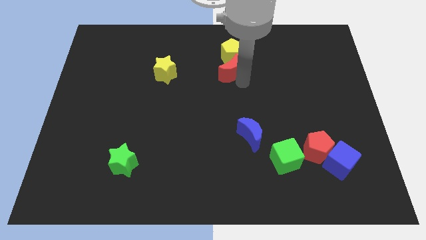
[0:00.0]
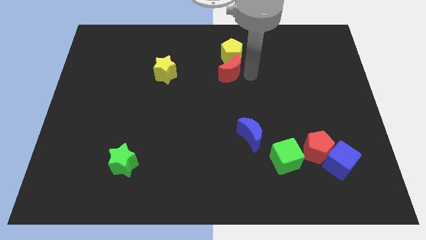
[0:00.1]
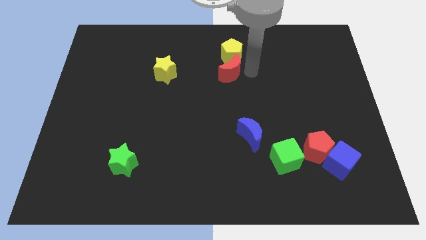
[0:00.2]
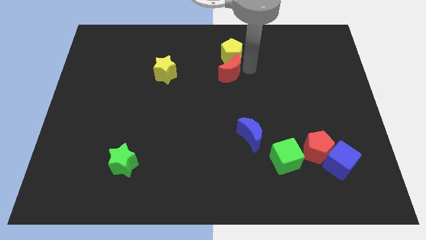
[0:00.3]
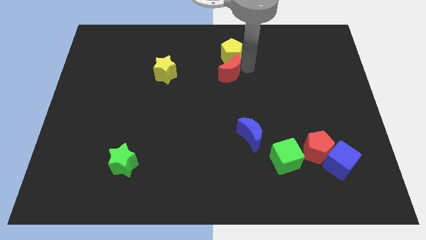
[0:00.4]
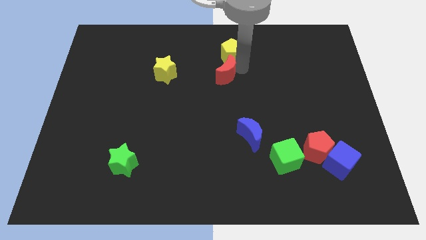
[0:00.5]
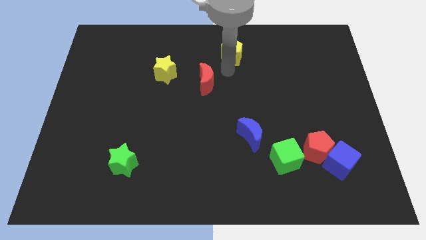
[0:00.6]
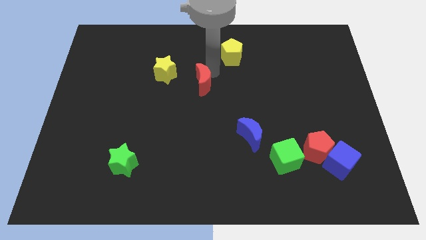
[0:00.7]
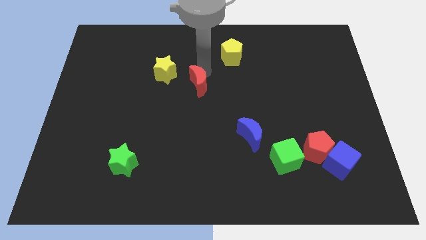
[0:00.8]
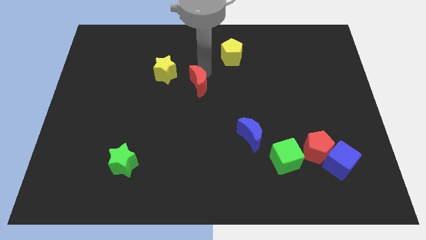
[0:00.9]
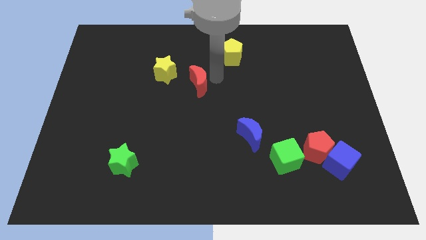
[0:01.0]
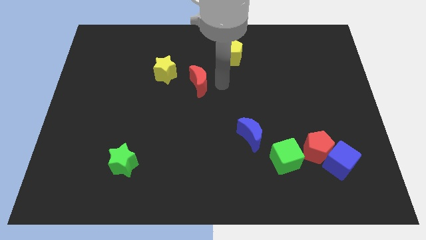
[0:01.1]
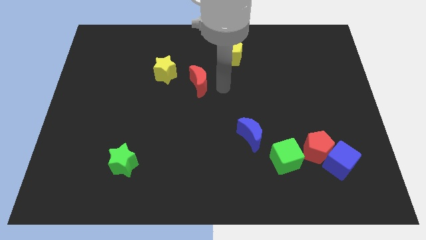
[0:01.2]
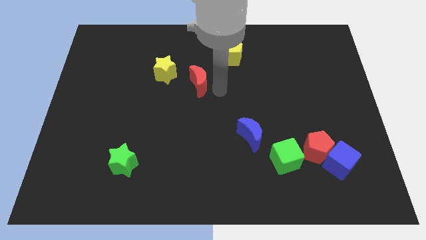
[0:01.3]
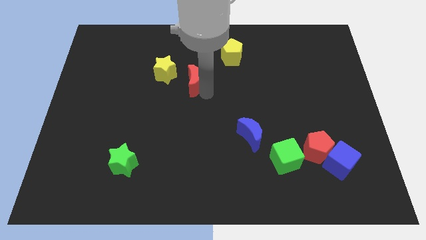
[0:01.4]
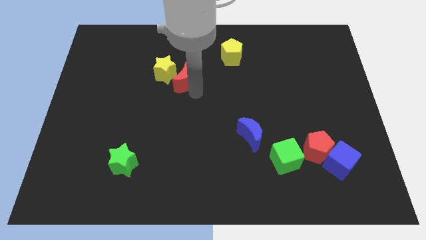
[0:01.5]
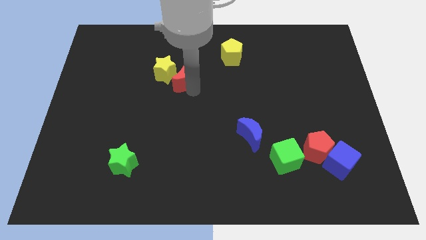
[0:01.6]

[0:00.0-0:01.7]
place the red moon right to the yellow star

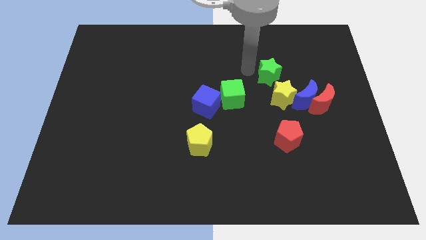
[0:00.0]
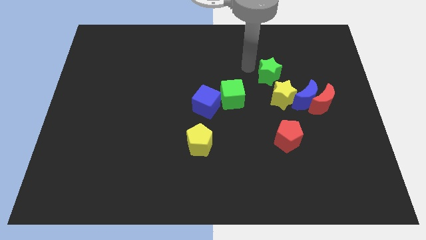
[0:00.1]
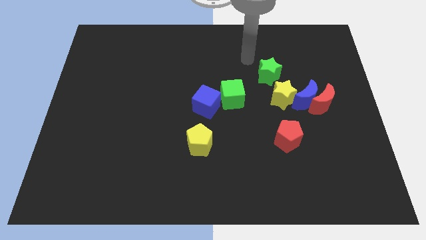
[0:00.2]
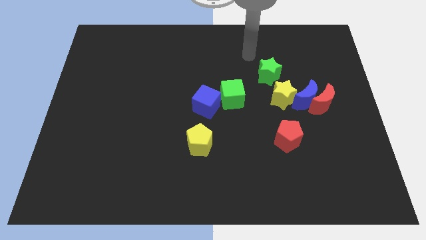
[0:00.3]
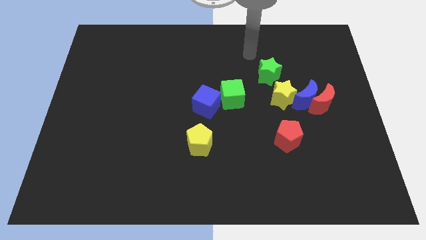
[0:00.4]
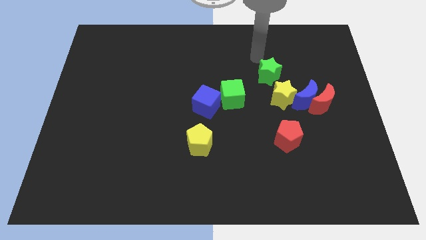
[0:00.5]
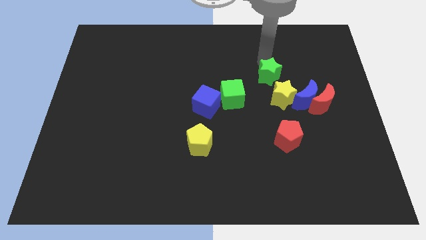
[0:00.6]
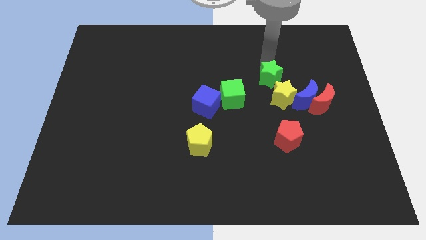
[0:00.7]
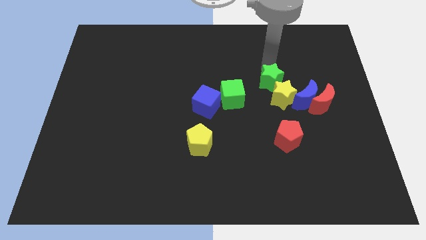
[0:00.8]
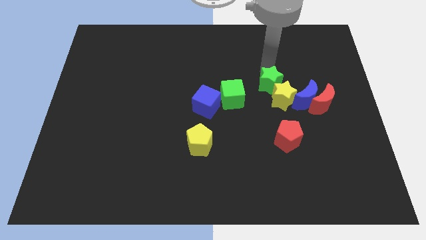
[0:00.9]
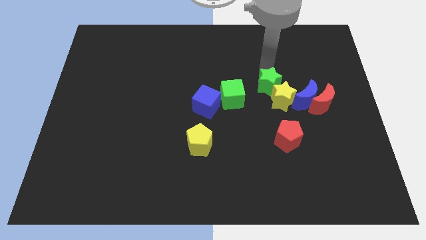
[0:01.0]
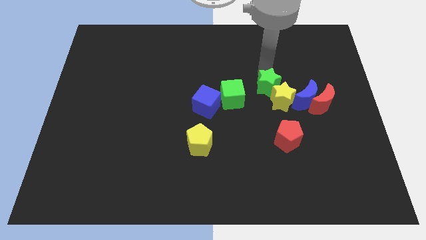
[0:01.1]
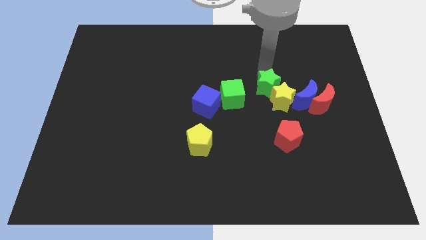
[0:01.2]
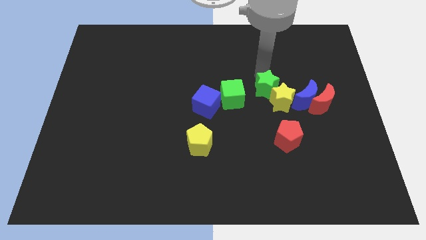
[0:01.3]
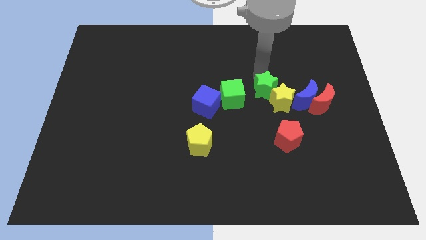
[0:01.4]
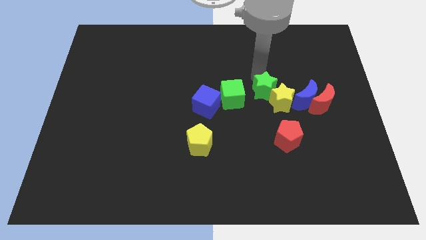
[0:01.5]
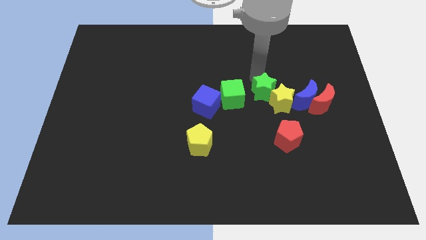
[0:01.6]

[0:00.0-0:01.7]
put the green star into the yellow star

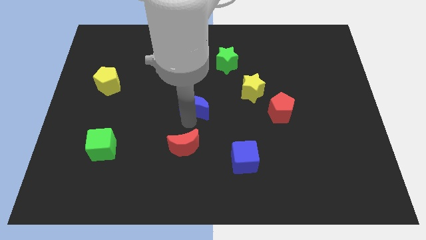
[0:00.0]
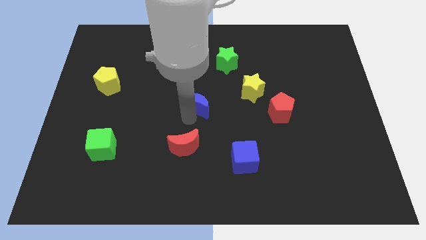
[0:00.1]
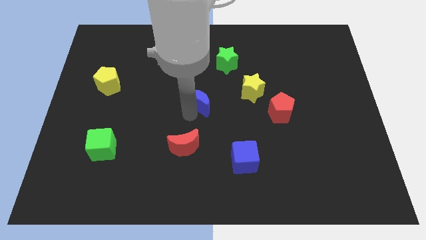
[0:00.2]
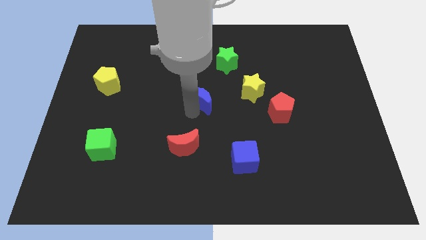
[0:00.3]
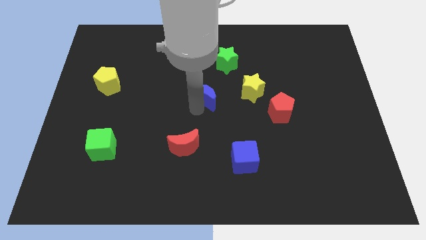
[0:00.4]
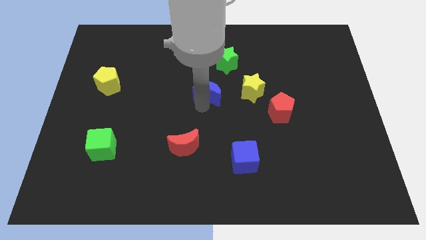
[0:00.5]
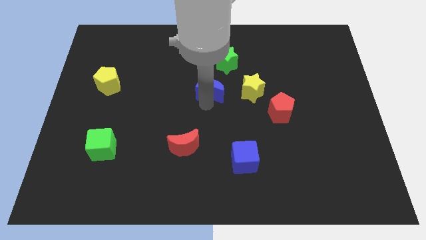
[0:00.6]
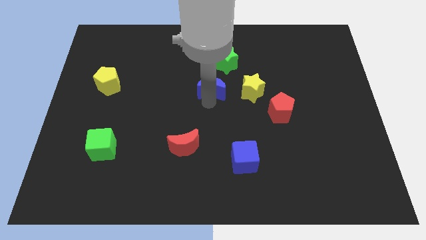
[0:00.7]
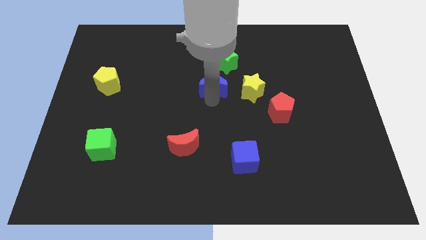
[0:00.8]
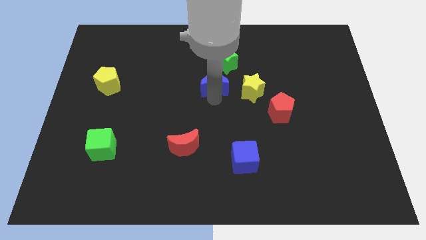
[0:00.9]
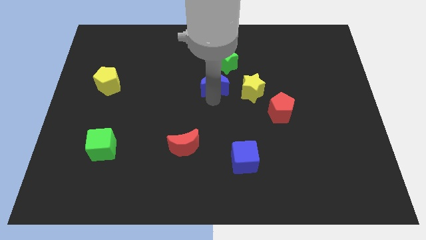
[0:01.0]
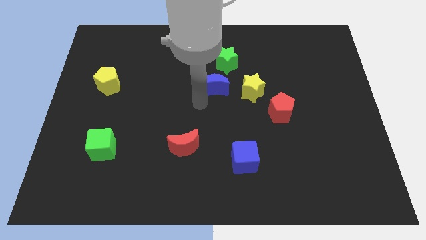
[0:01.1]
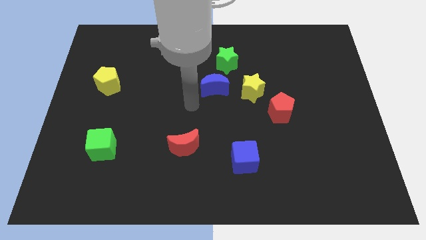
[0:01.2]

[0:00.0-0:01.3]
move the blue crescent towards the bottom of the green star

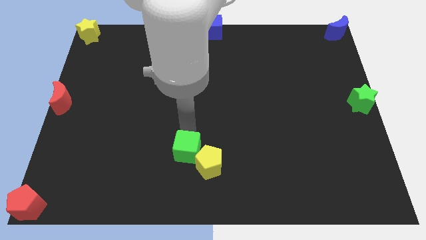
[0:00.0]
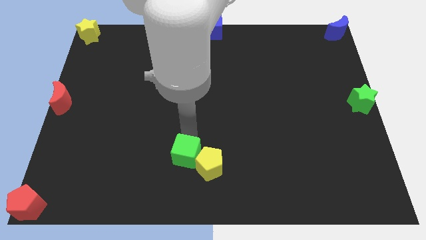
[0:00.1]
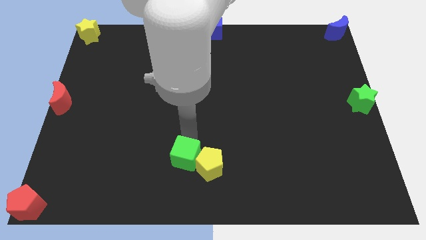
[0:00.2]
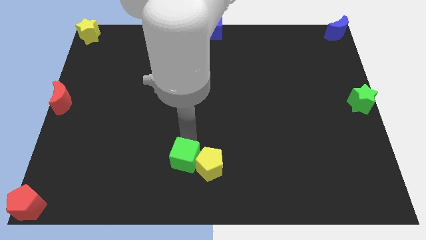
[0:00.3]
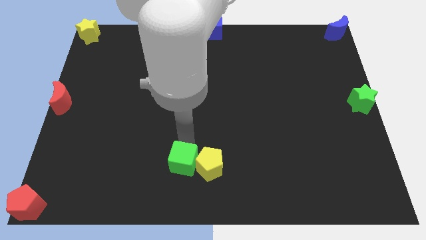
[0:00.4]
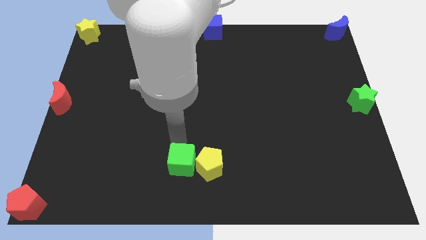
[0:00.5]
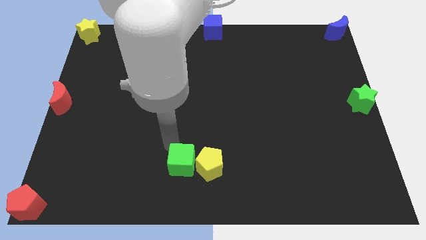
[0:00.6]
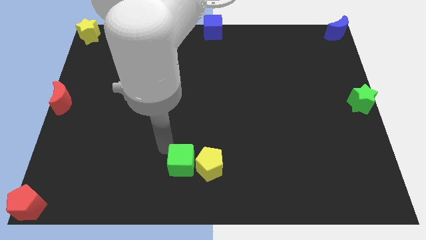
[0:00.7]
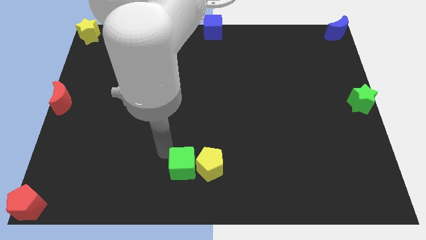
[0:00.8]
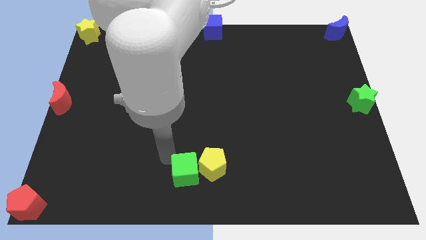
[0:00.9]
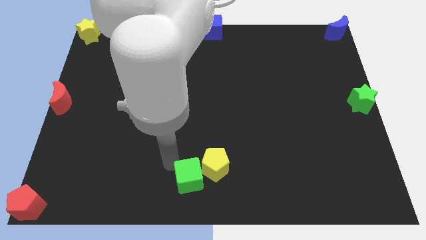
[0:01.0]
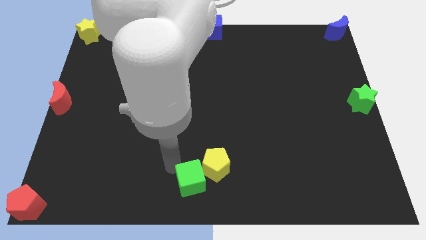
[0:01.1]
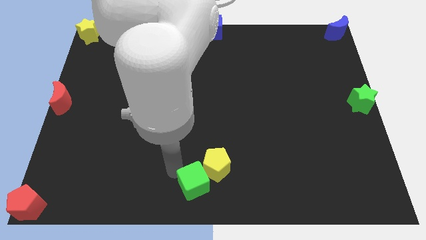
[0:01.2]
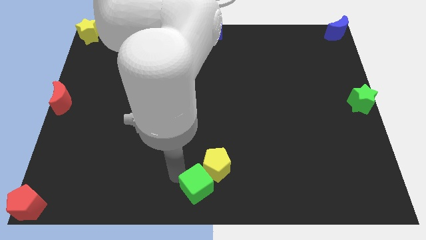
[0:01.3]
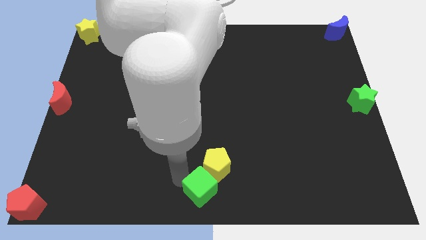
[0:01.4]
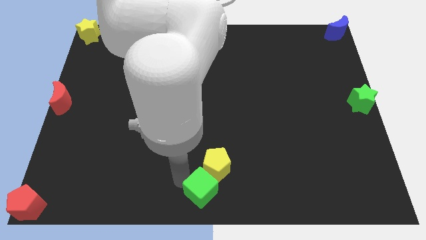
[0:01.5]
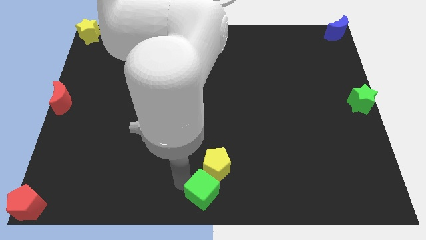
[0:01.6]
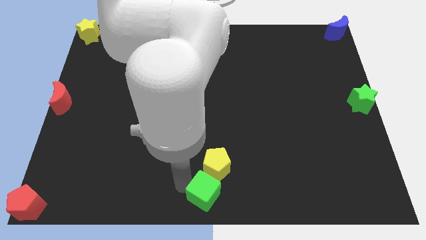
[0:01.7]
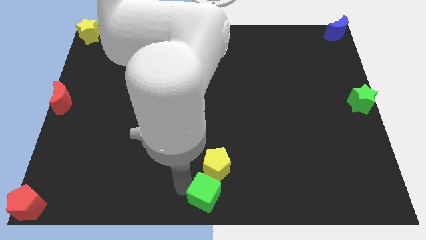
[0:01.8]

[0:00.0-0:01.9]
place the green square on the bottom side of the yellow pentagon
